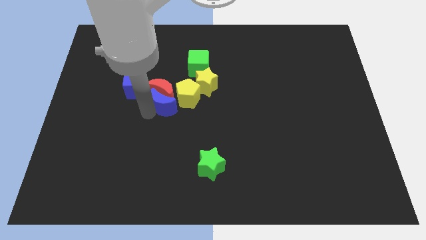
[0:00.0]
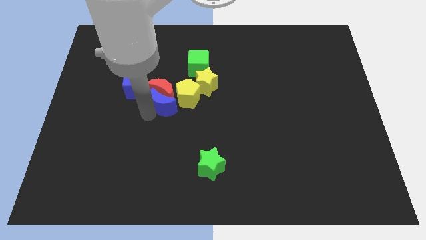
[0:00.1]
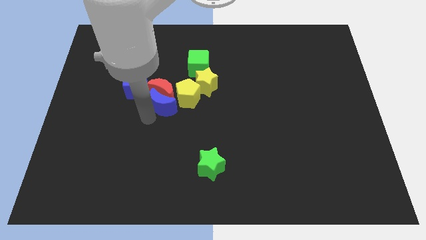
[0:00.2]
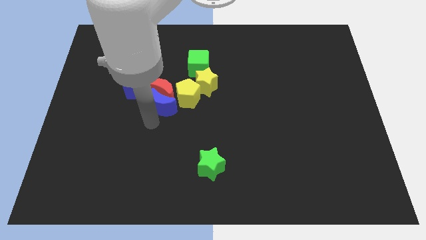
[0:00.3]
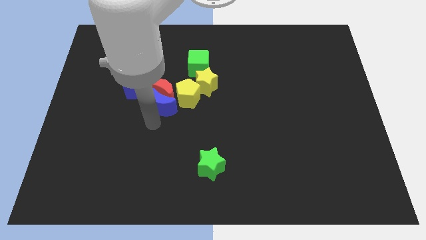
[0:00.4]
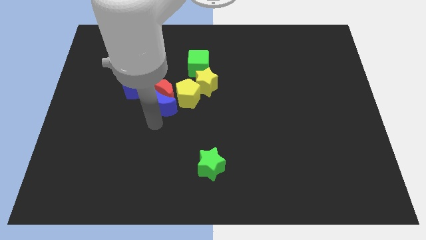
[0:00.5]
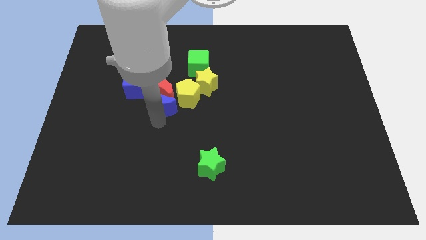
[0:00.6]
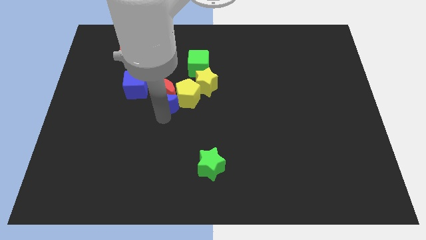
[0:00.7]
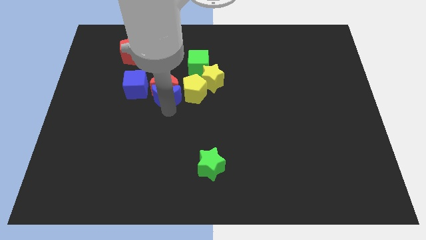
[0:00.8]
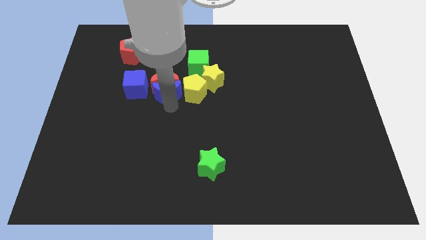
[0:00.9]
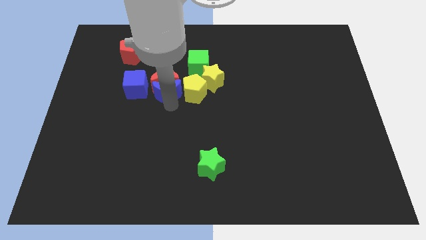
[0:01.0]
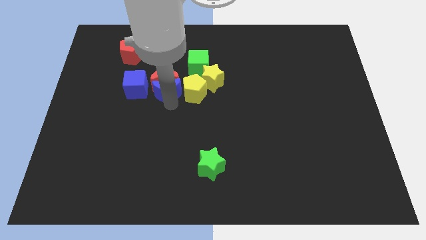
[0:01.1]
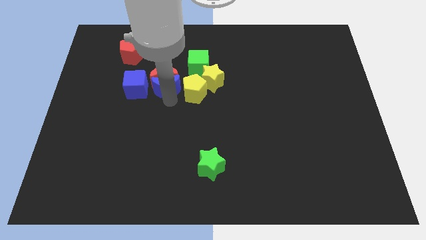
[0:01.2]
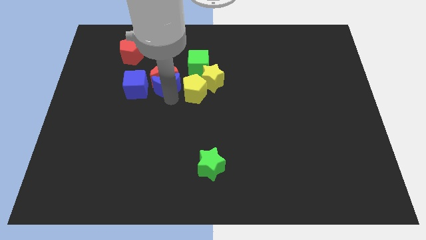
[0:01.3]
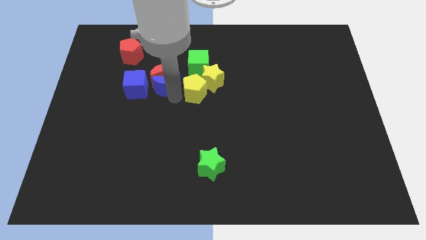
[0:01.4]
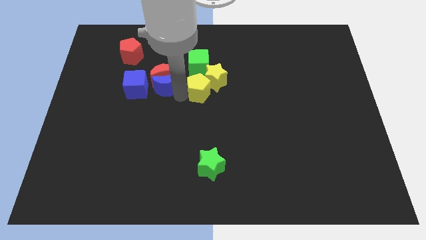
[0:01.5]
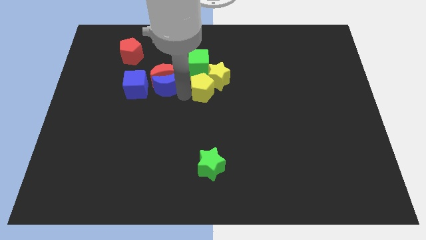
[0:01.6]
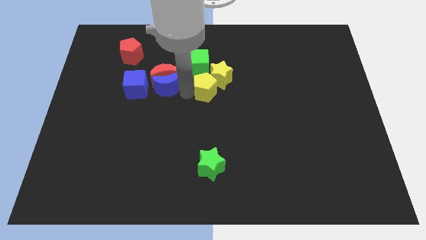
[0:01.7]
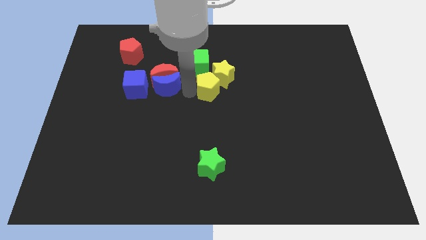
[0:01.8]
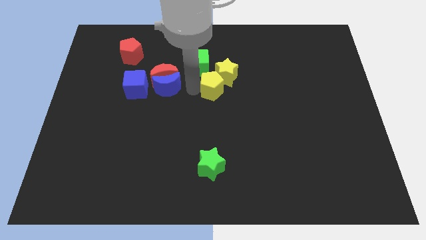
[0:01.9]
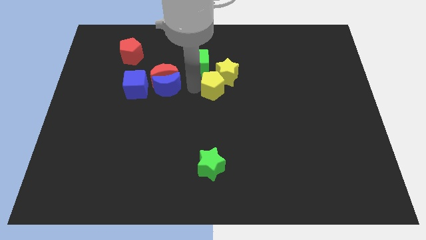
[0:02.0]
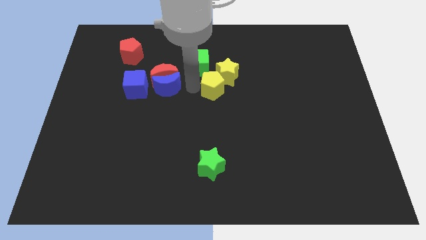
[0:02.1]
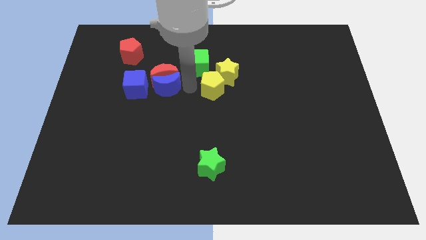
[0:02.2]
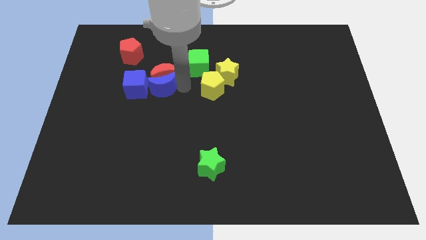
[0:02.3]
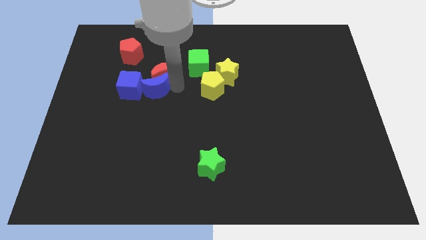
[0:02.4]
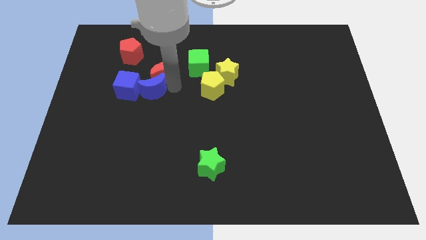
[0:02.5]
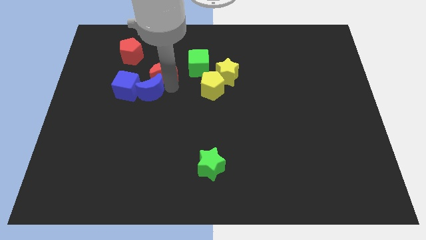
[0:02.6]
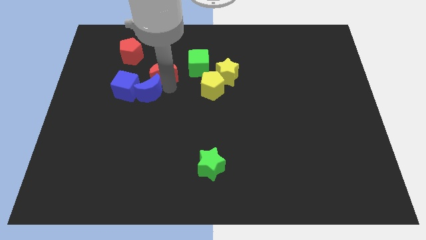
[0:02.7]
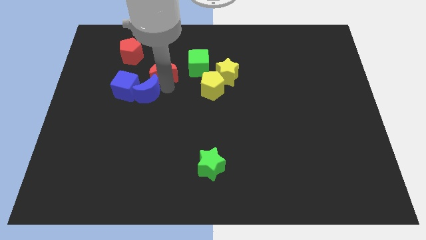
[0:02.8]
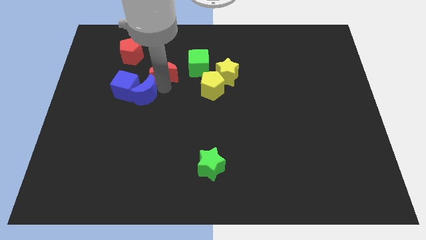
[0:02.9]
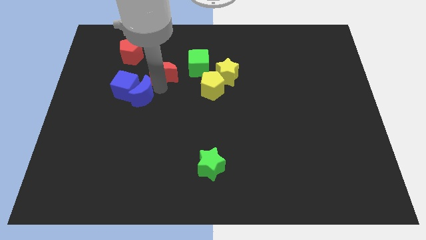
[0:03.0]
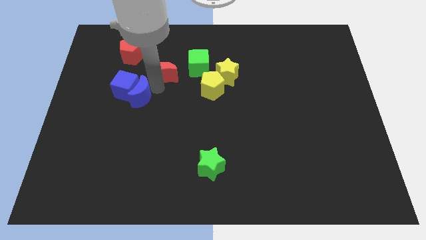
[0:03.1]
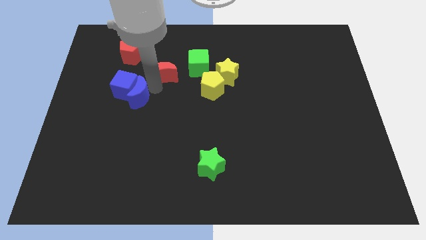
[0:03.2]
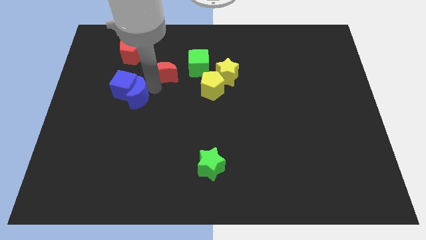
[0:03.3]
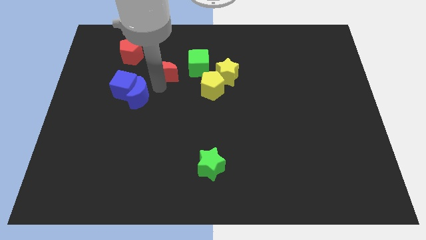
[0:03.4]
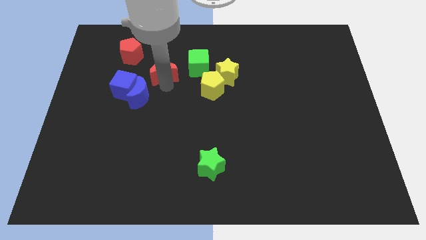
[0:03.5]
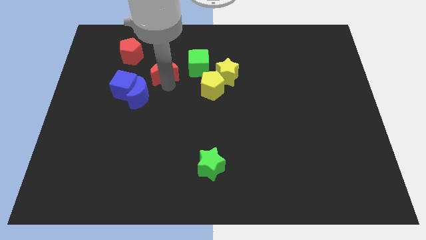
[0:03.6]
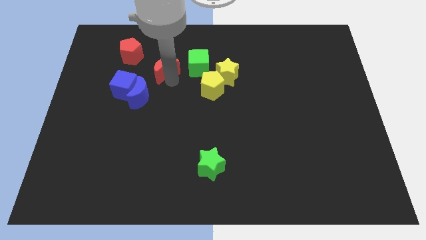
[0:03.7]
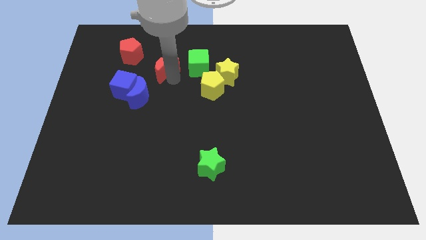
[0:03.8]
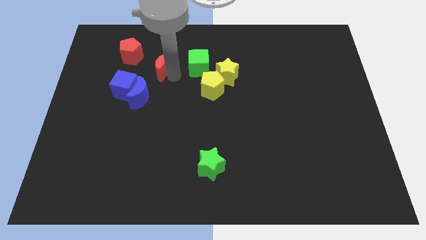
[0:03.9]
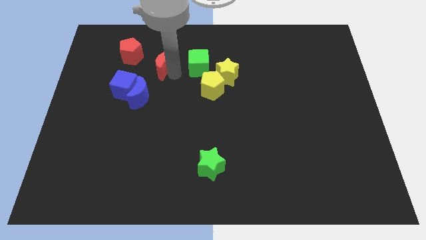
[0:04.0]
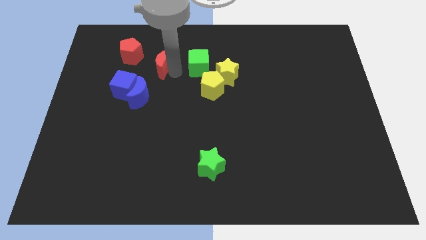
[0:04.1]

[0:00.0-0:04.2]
separate the red moon and blue moon

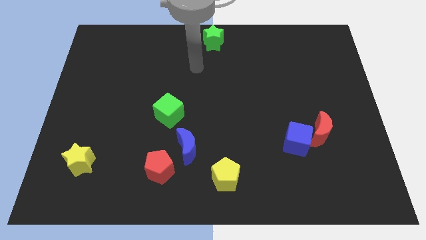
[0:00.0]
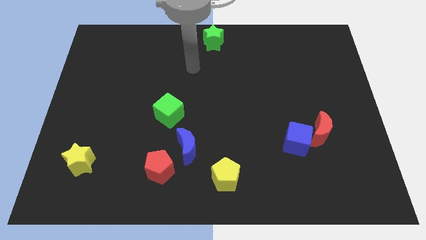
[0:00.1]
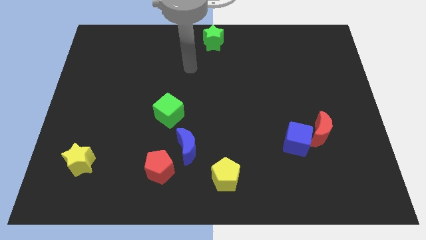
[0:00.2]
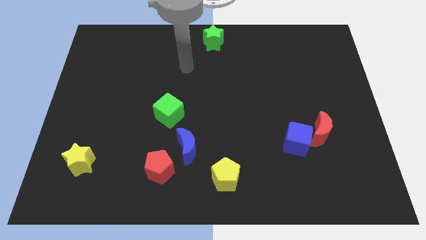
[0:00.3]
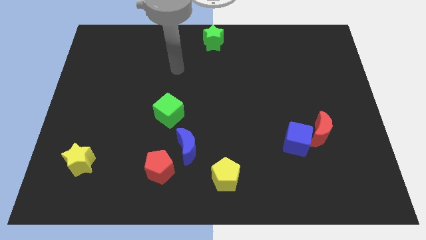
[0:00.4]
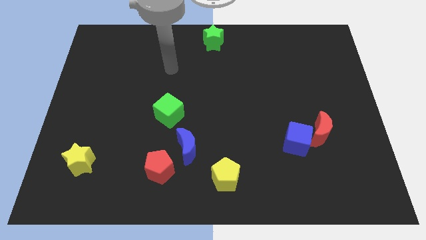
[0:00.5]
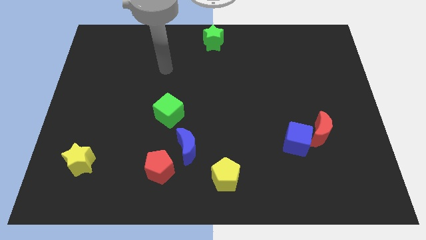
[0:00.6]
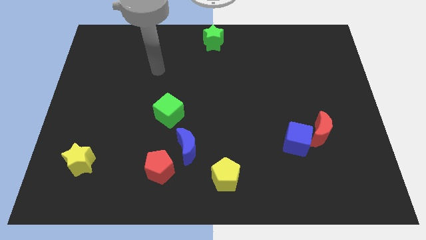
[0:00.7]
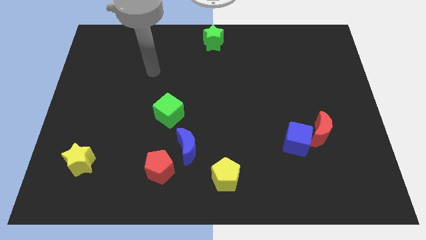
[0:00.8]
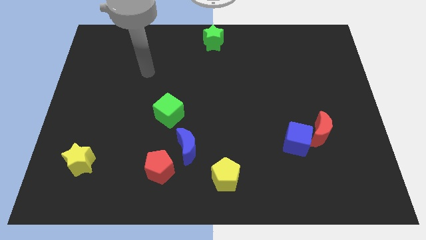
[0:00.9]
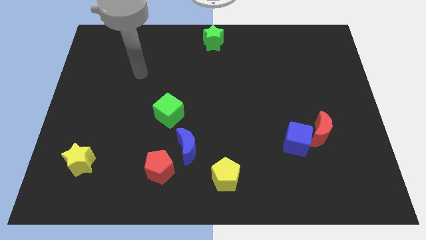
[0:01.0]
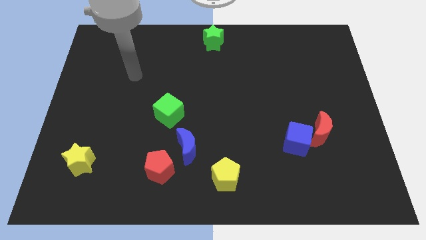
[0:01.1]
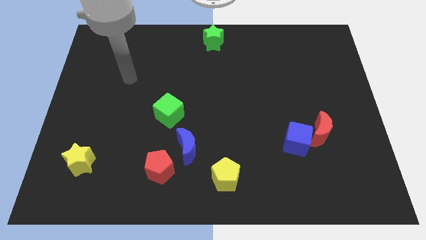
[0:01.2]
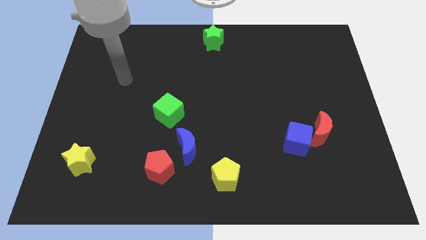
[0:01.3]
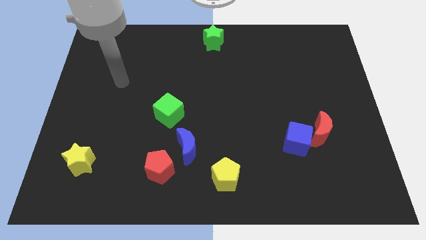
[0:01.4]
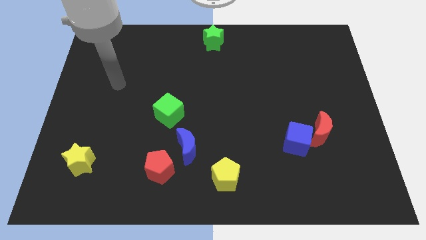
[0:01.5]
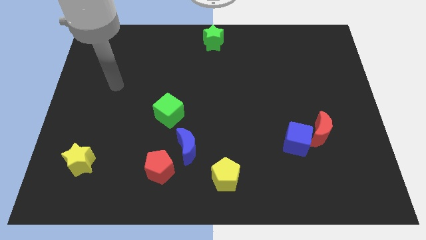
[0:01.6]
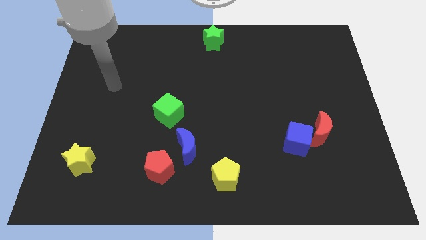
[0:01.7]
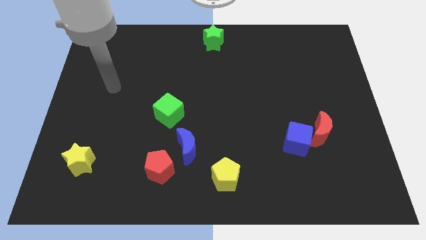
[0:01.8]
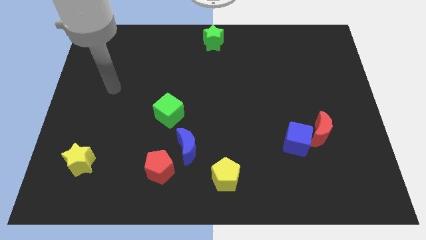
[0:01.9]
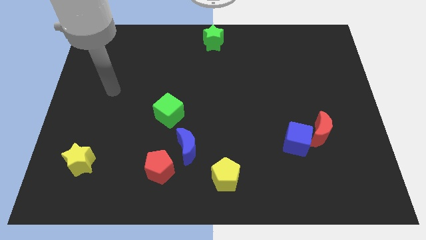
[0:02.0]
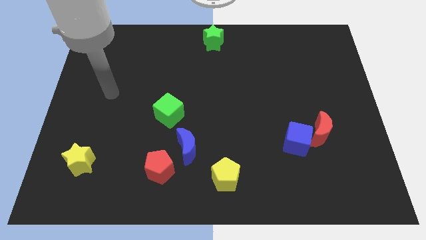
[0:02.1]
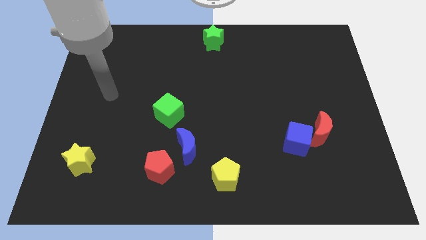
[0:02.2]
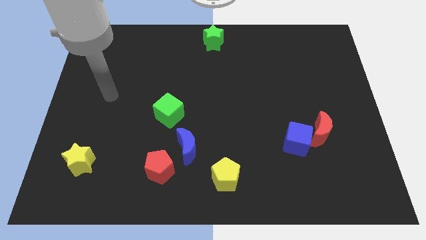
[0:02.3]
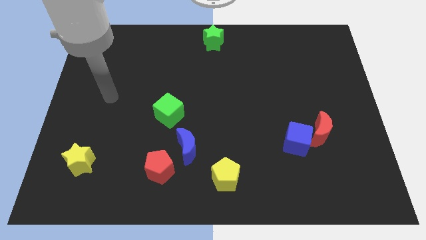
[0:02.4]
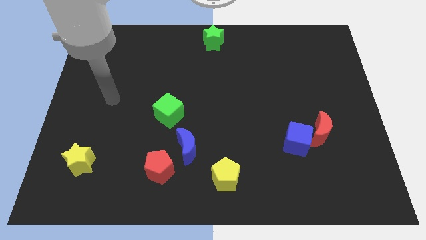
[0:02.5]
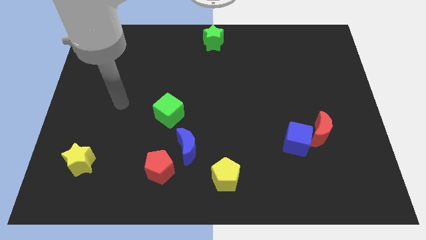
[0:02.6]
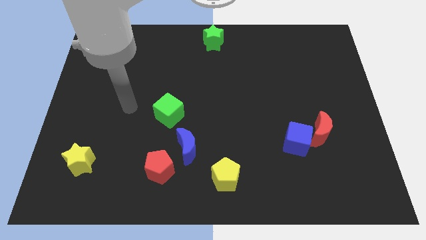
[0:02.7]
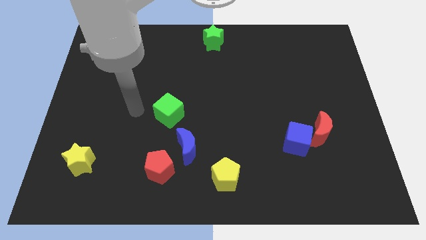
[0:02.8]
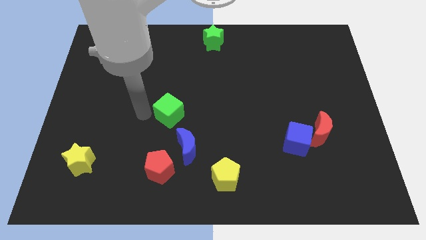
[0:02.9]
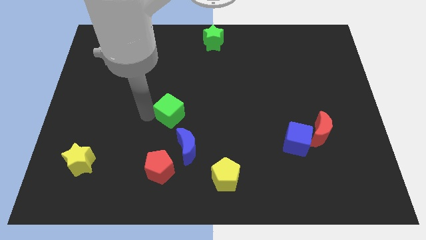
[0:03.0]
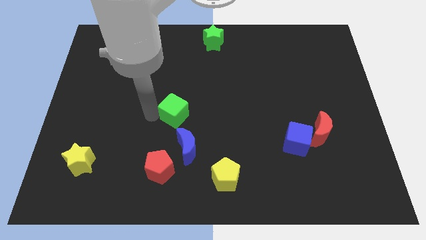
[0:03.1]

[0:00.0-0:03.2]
move your arm away from the green star

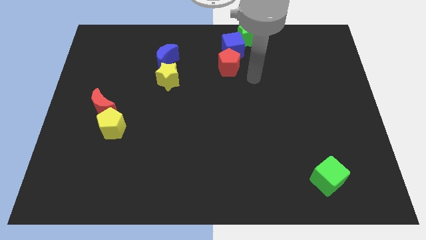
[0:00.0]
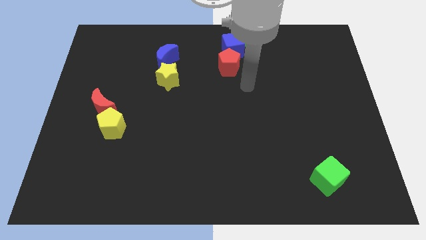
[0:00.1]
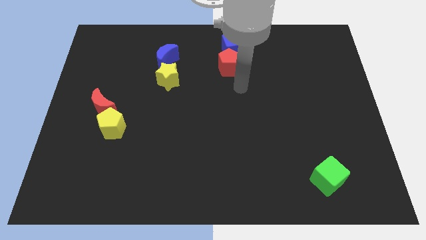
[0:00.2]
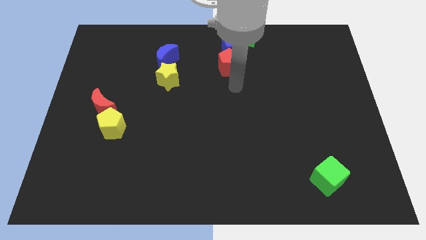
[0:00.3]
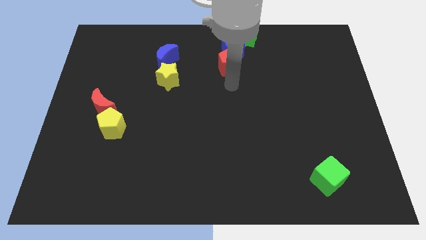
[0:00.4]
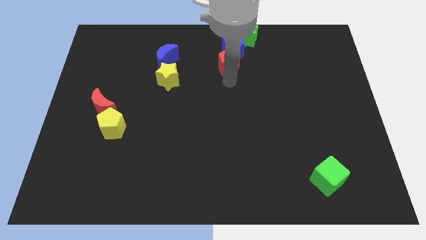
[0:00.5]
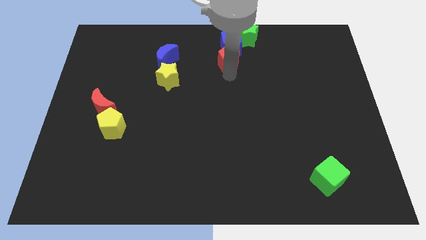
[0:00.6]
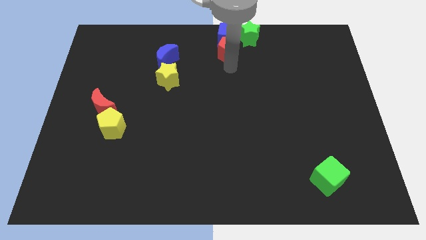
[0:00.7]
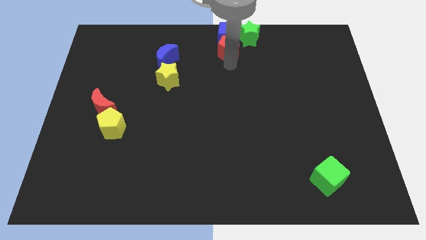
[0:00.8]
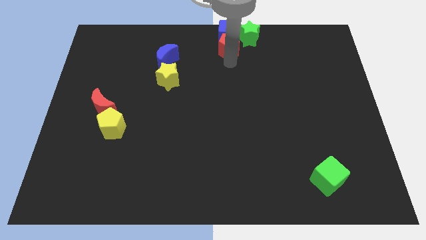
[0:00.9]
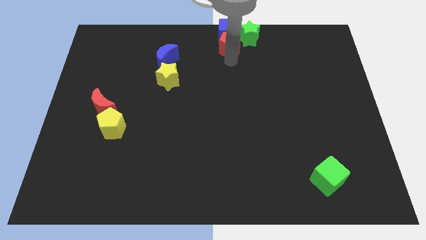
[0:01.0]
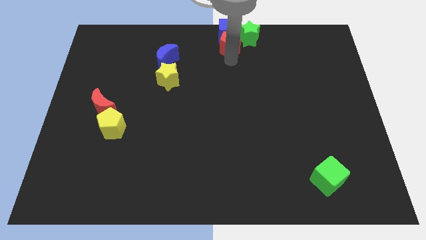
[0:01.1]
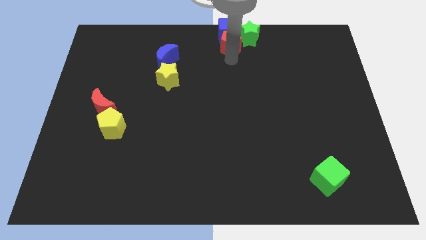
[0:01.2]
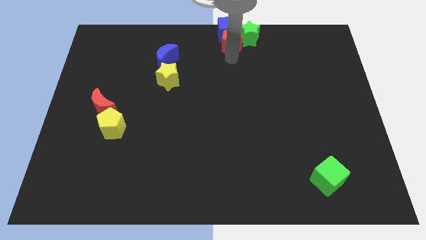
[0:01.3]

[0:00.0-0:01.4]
push the red pentagon along with the blue cube to the top
